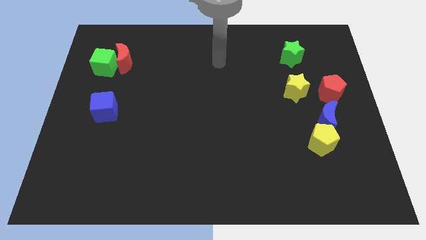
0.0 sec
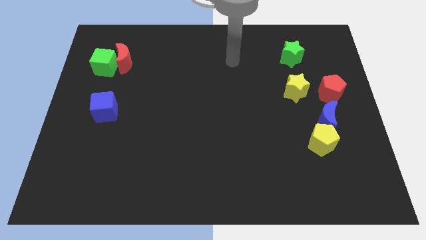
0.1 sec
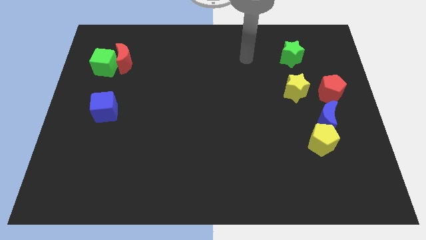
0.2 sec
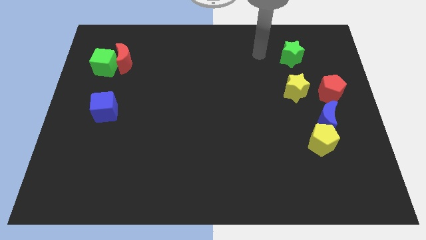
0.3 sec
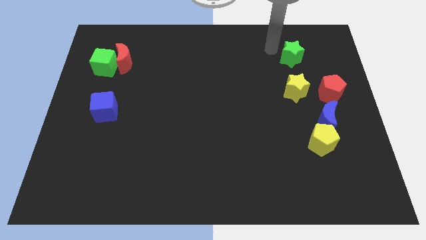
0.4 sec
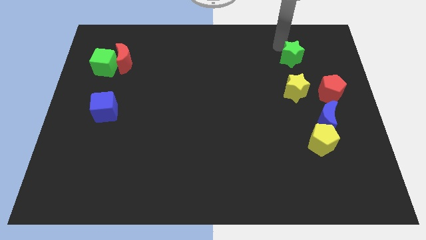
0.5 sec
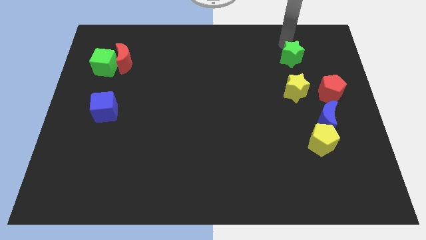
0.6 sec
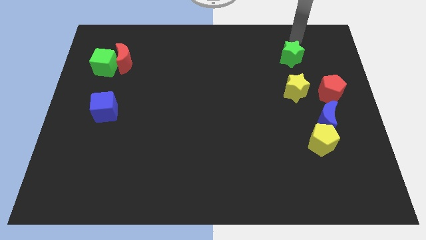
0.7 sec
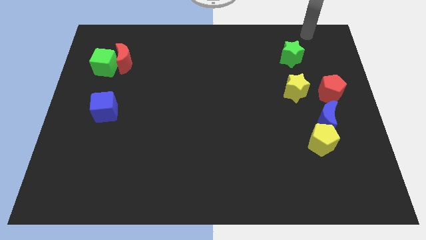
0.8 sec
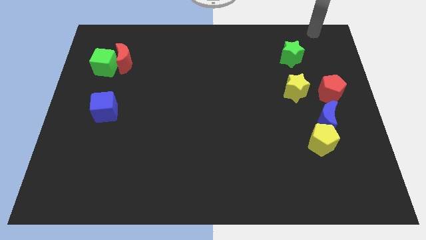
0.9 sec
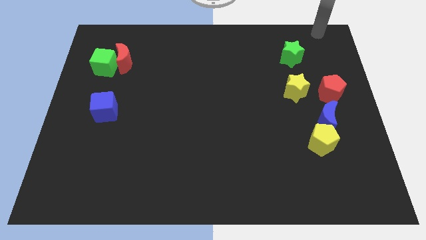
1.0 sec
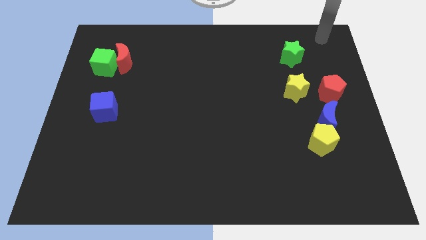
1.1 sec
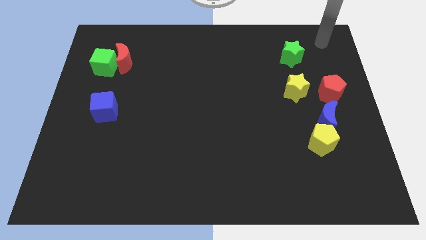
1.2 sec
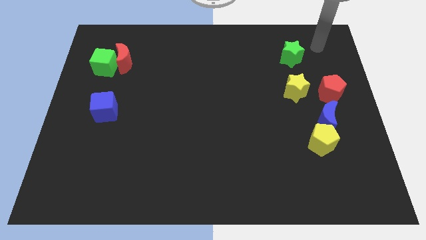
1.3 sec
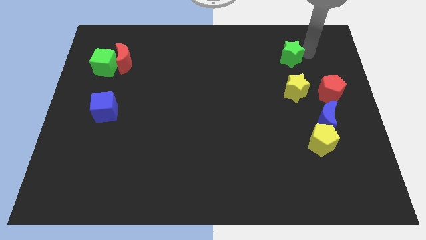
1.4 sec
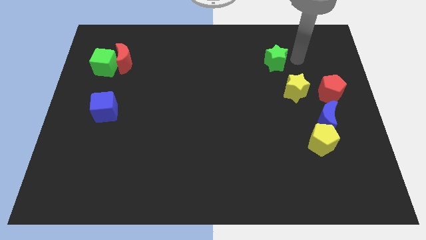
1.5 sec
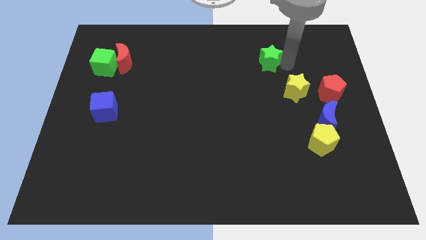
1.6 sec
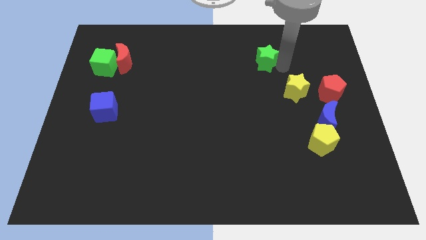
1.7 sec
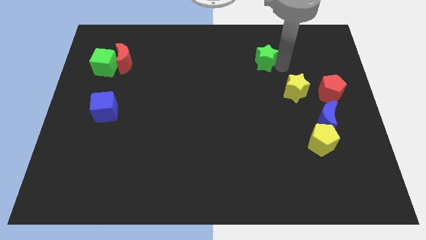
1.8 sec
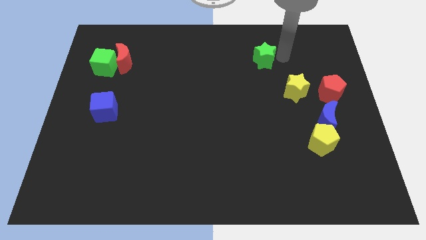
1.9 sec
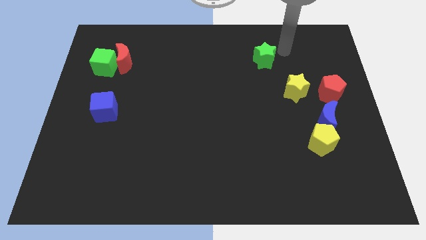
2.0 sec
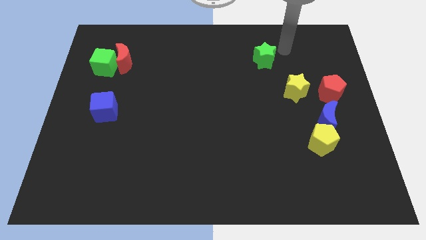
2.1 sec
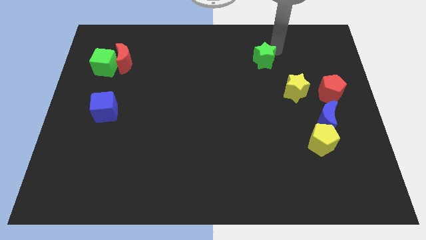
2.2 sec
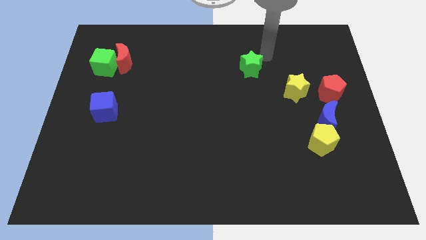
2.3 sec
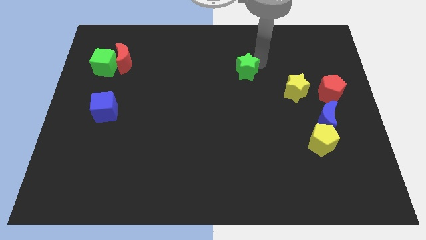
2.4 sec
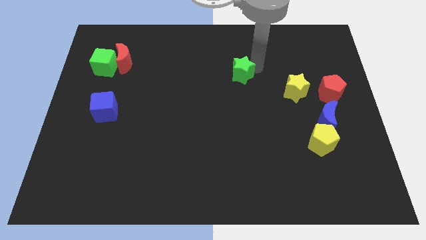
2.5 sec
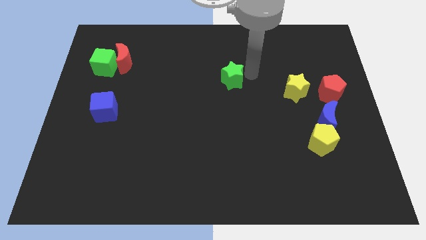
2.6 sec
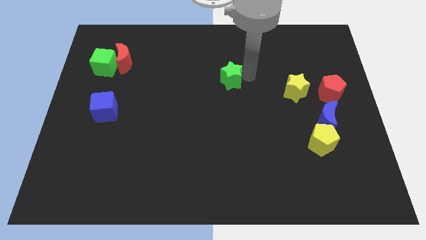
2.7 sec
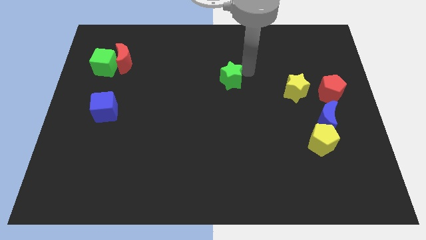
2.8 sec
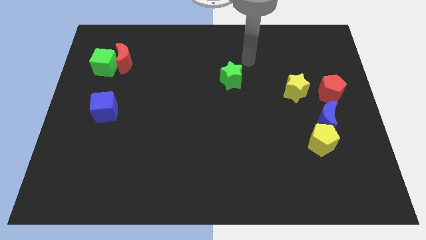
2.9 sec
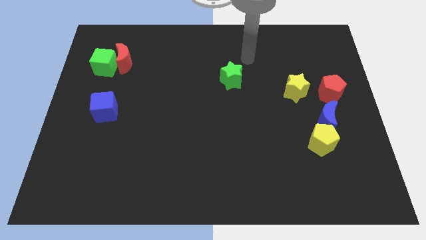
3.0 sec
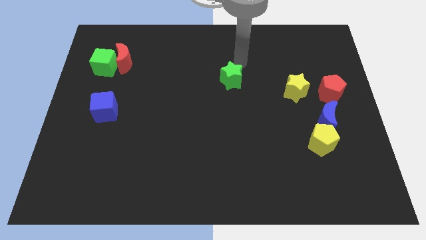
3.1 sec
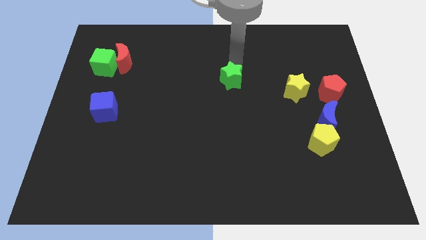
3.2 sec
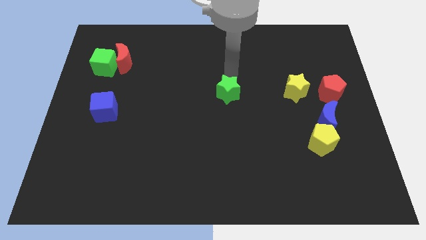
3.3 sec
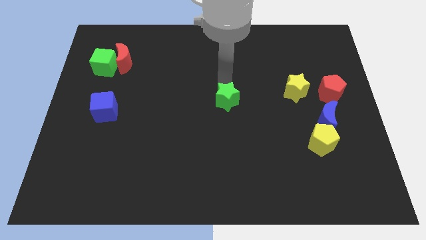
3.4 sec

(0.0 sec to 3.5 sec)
move green star towards the center of the board

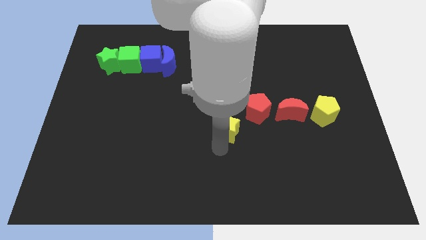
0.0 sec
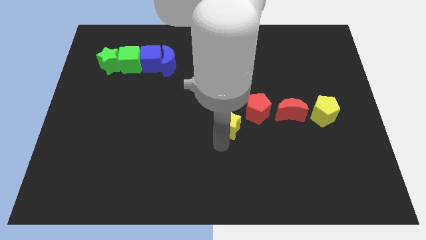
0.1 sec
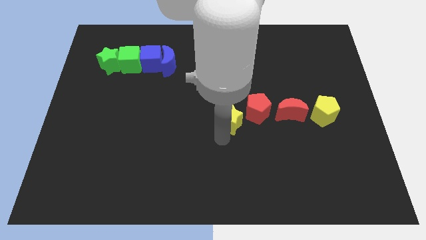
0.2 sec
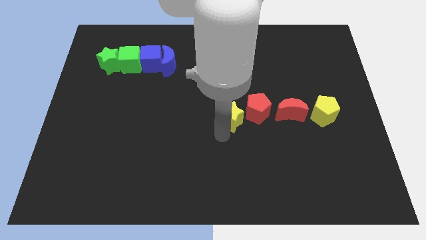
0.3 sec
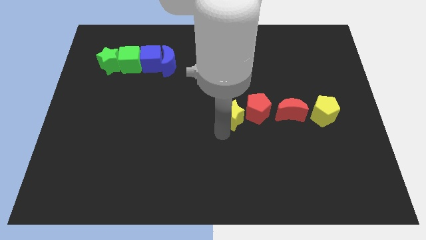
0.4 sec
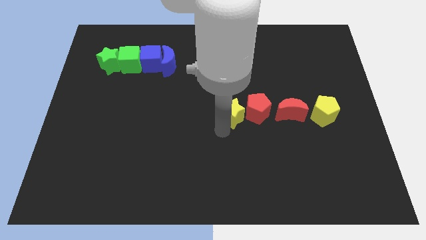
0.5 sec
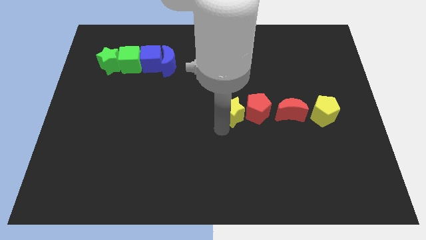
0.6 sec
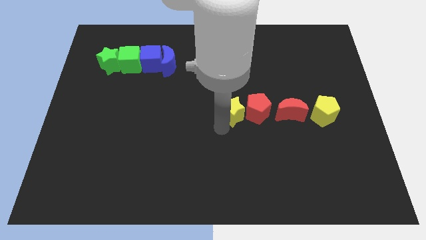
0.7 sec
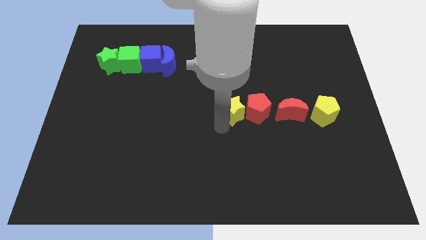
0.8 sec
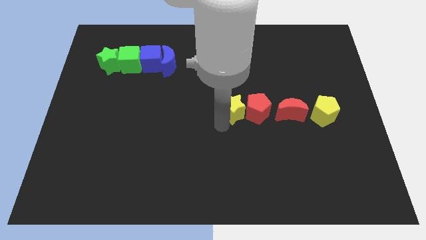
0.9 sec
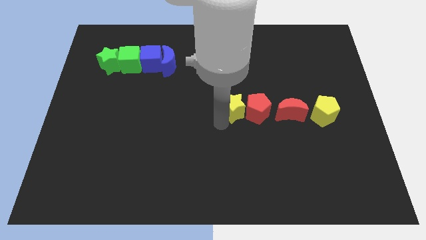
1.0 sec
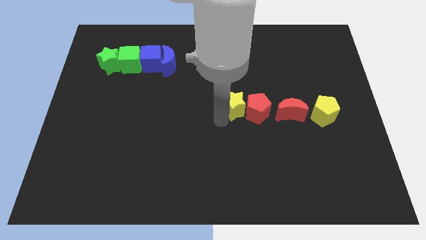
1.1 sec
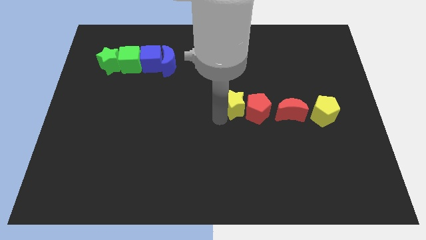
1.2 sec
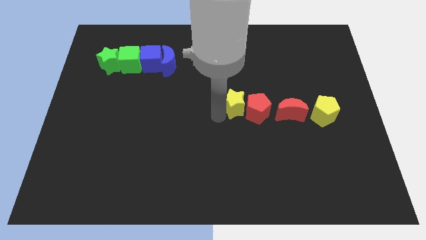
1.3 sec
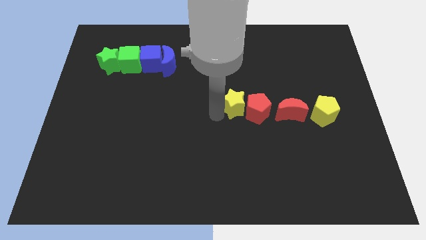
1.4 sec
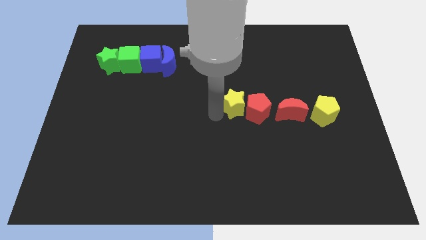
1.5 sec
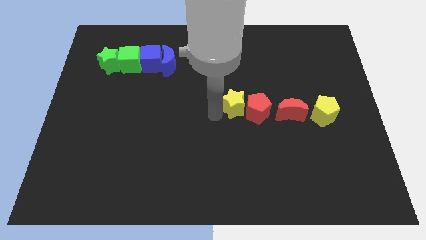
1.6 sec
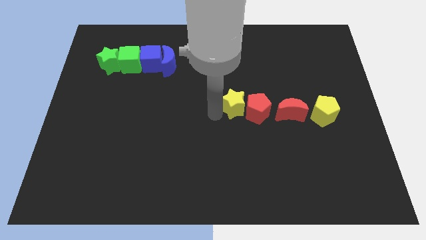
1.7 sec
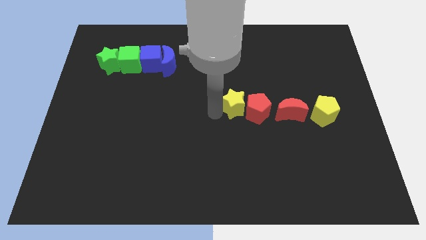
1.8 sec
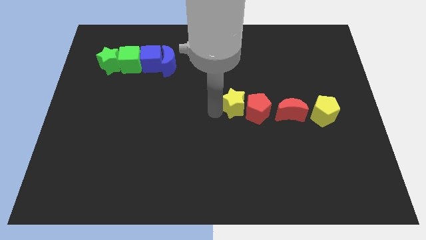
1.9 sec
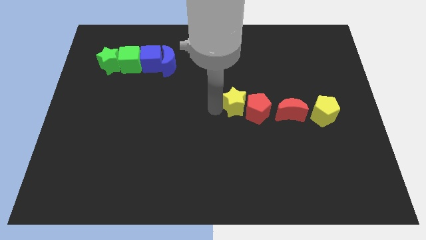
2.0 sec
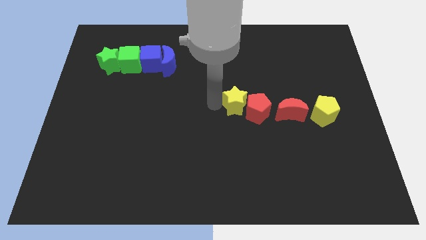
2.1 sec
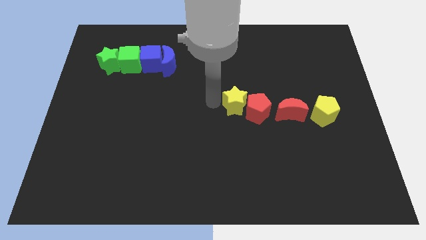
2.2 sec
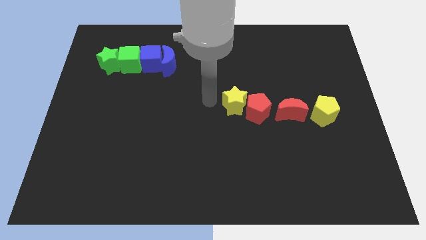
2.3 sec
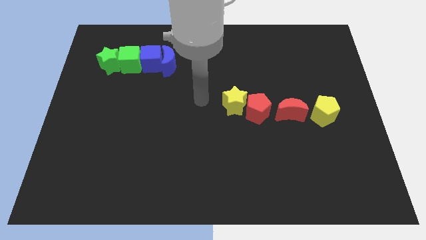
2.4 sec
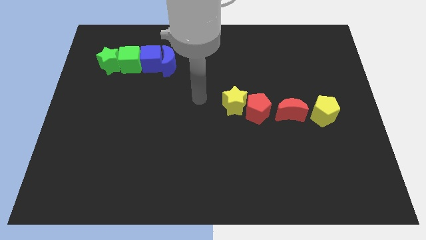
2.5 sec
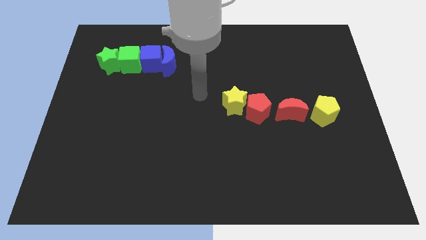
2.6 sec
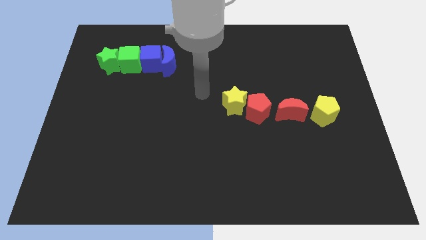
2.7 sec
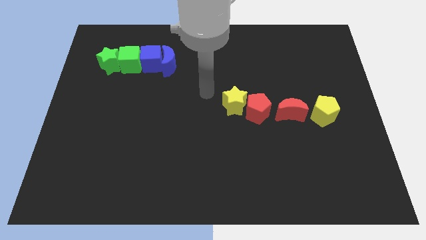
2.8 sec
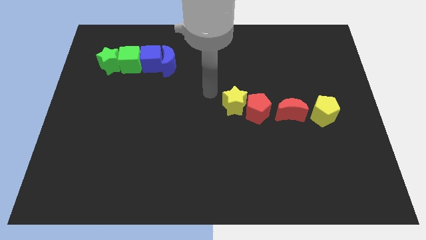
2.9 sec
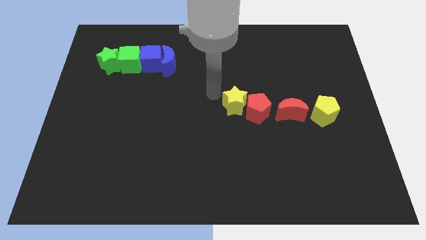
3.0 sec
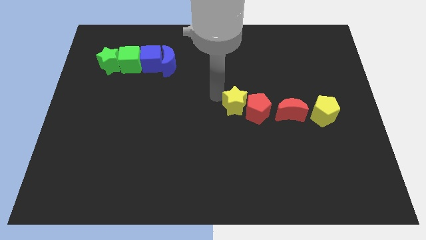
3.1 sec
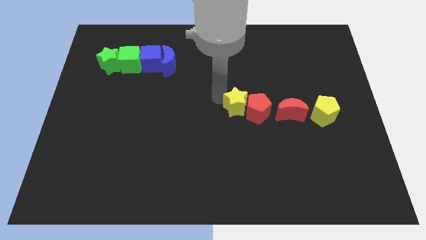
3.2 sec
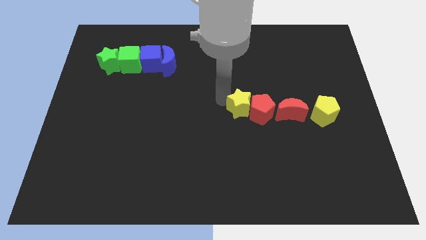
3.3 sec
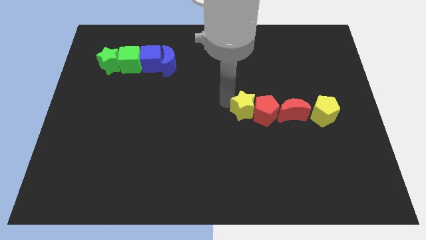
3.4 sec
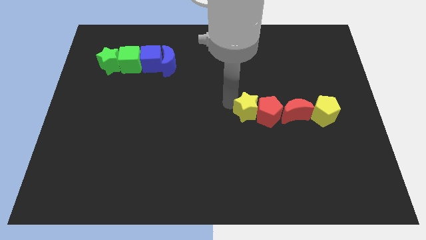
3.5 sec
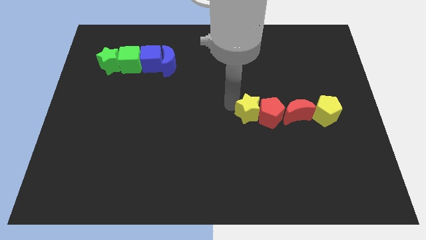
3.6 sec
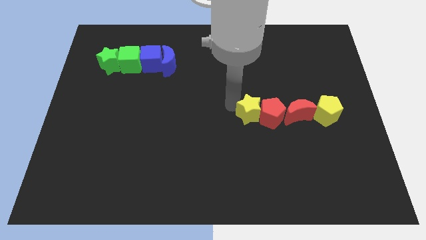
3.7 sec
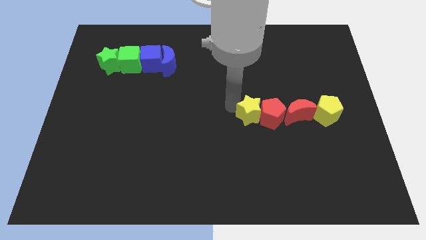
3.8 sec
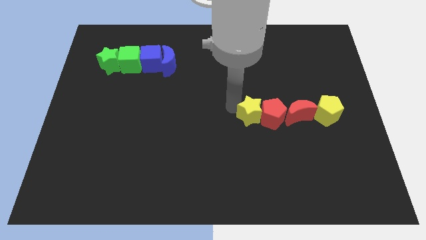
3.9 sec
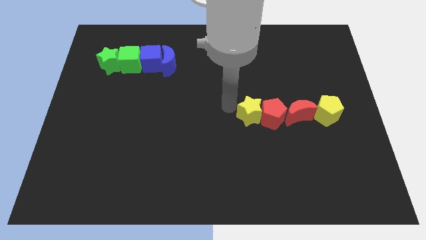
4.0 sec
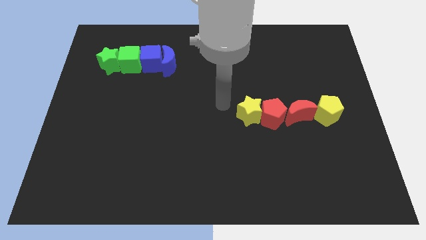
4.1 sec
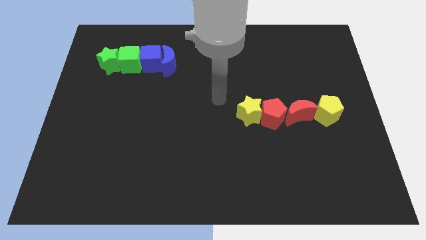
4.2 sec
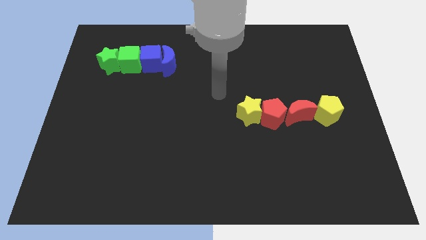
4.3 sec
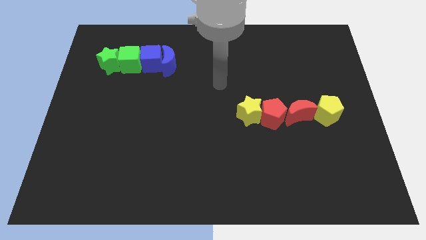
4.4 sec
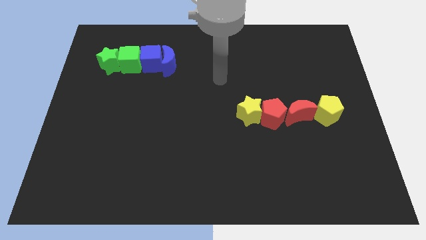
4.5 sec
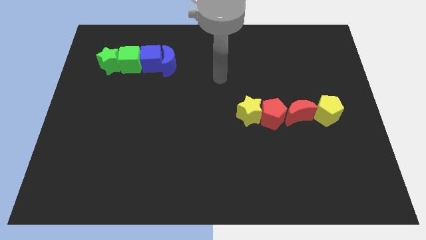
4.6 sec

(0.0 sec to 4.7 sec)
push the yellow star into red blocks to make horizontal line

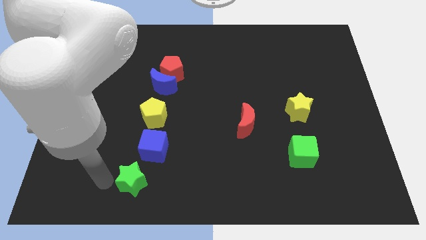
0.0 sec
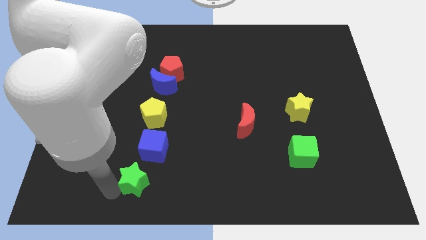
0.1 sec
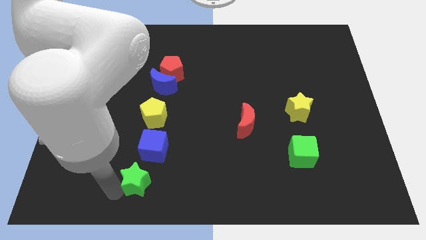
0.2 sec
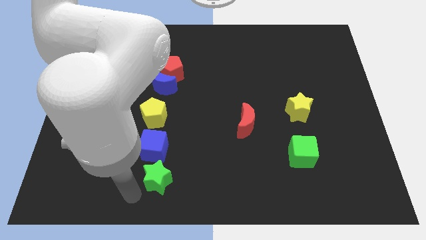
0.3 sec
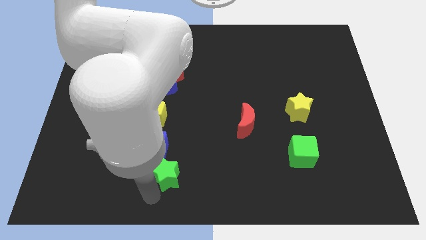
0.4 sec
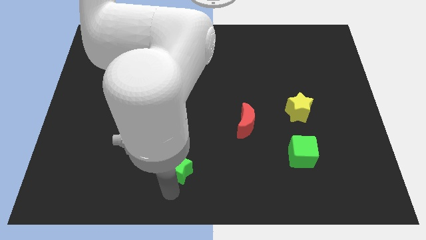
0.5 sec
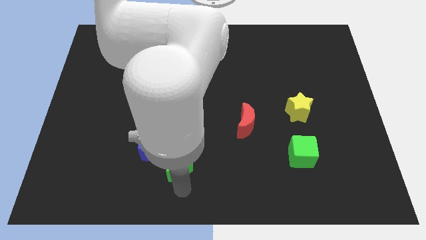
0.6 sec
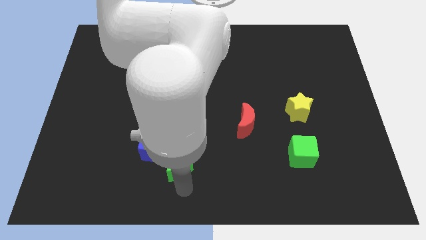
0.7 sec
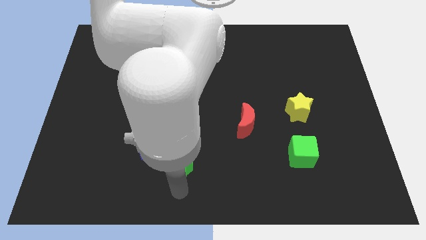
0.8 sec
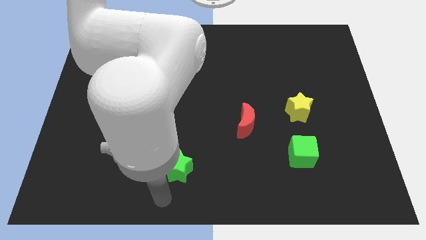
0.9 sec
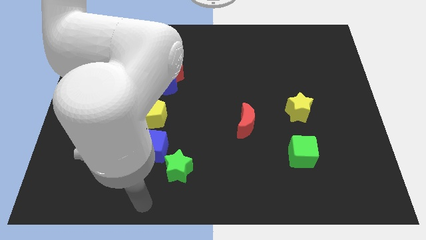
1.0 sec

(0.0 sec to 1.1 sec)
put the green star at the bottom right of the blue cube
